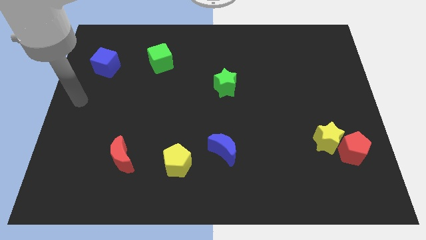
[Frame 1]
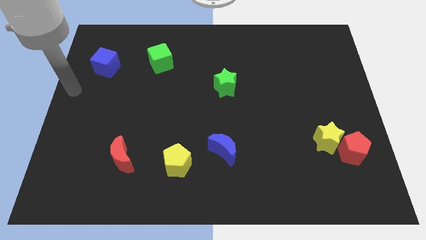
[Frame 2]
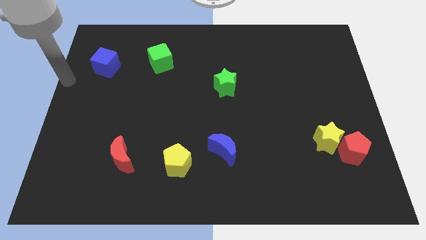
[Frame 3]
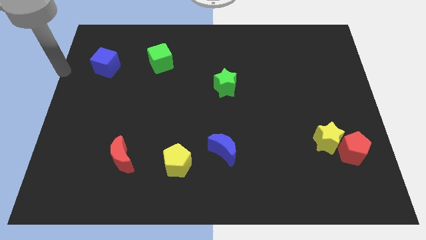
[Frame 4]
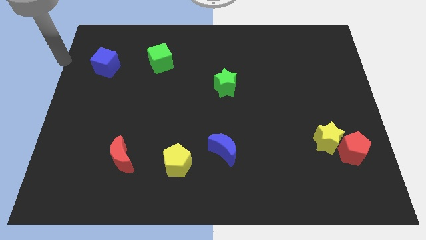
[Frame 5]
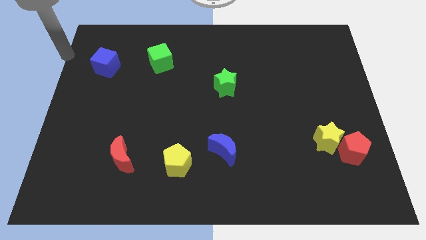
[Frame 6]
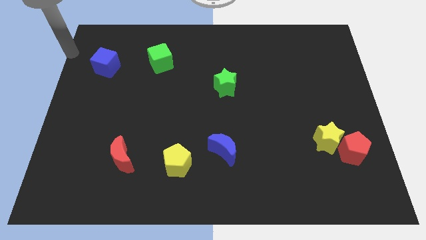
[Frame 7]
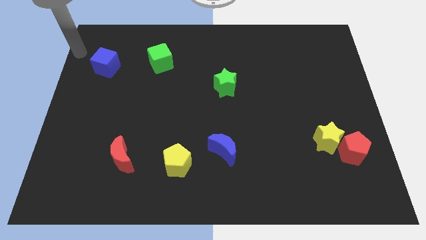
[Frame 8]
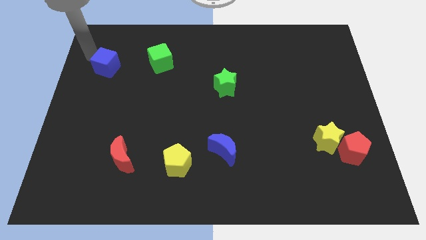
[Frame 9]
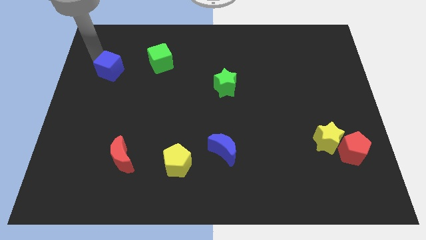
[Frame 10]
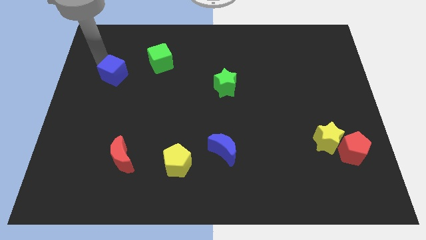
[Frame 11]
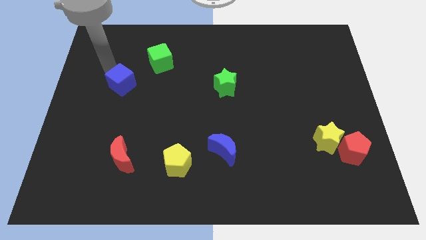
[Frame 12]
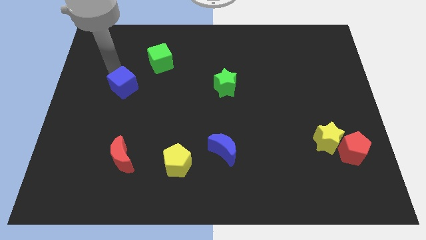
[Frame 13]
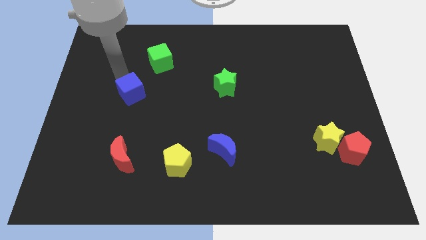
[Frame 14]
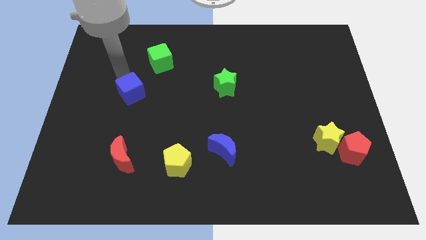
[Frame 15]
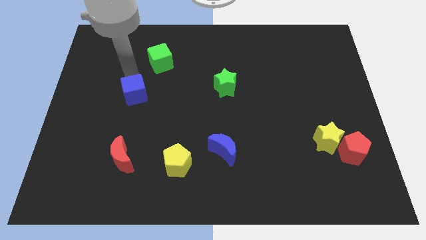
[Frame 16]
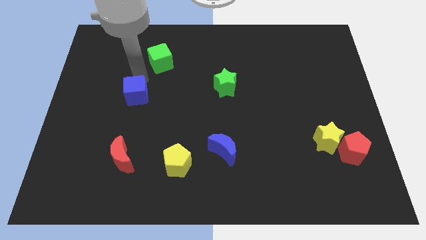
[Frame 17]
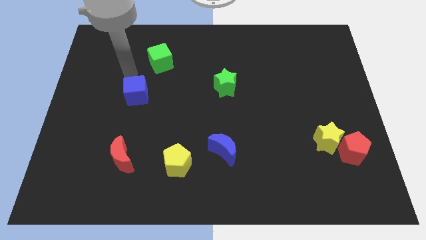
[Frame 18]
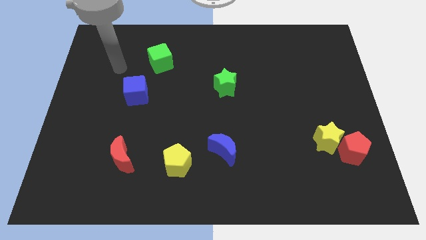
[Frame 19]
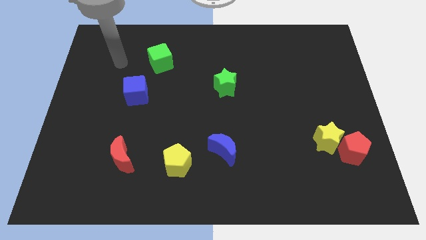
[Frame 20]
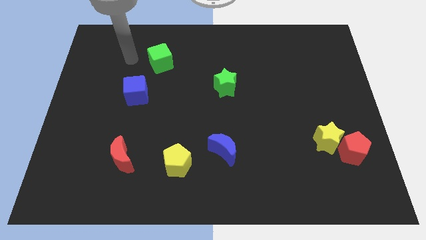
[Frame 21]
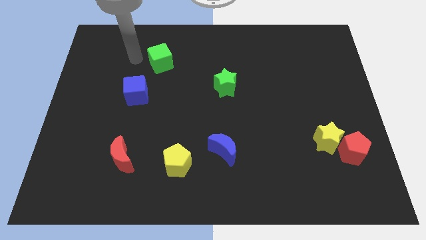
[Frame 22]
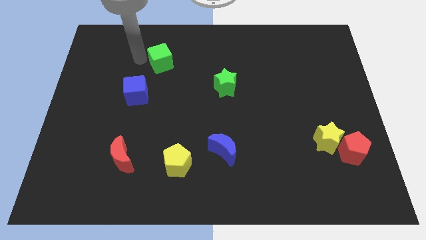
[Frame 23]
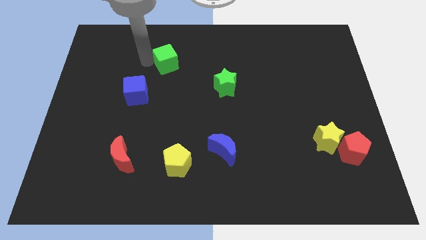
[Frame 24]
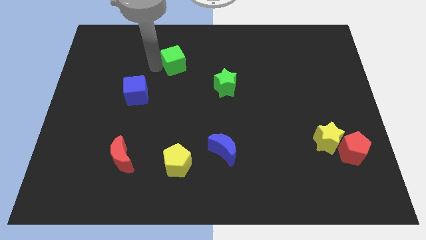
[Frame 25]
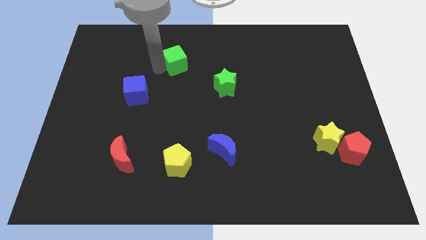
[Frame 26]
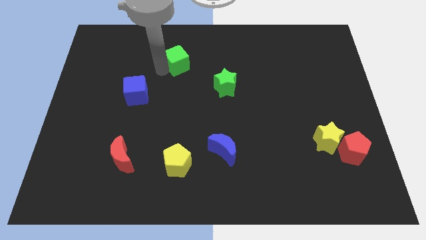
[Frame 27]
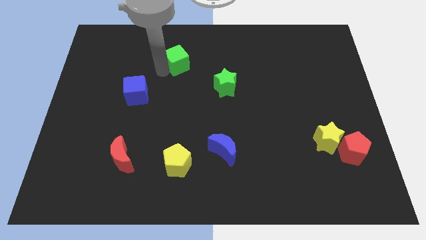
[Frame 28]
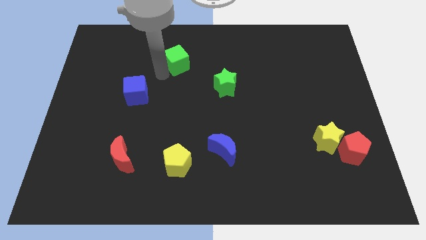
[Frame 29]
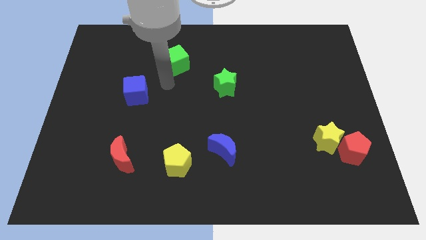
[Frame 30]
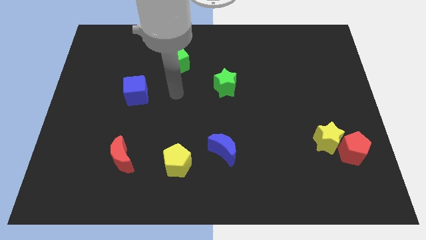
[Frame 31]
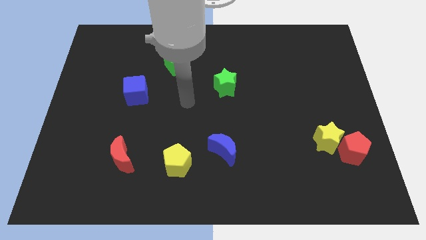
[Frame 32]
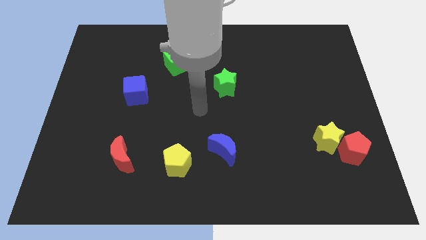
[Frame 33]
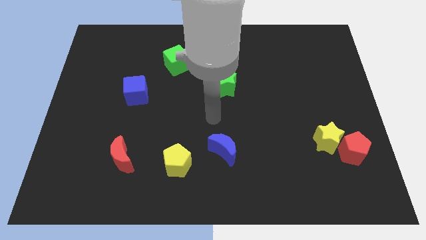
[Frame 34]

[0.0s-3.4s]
move both the cubes diagonal to each other

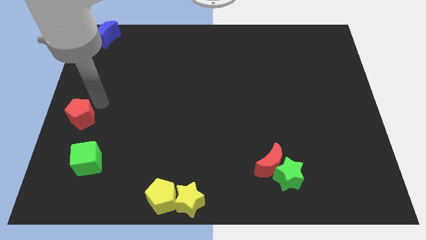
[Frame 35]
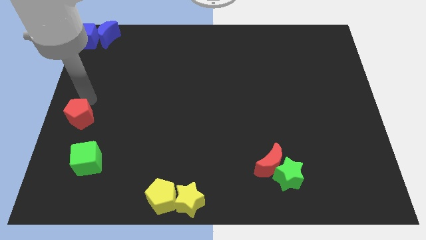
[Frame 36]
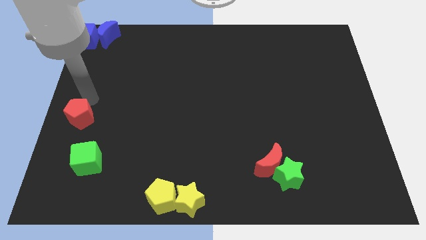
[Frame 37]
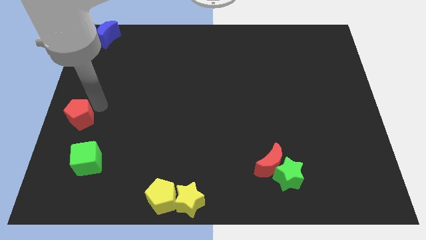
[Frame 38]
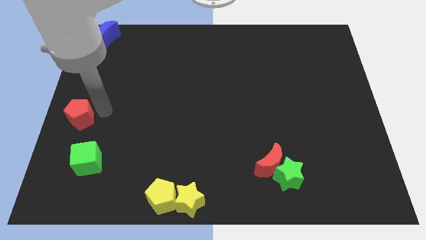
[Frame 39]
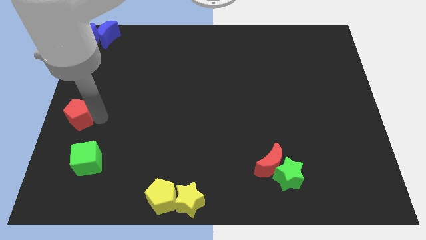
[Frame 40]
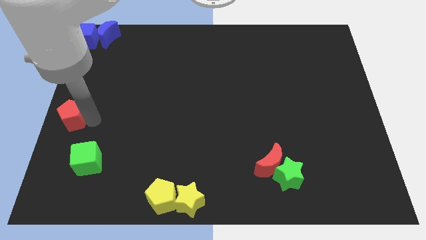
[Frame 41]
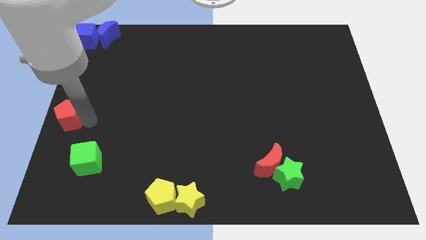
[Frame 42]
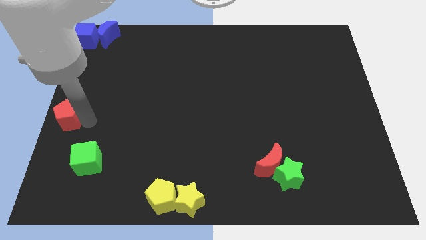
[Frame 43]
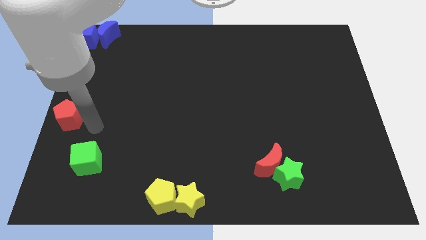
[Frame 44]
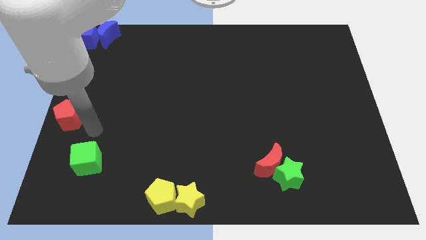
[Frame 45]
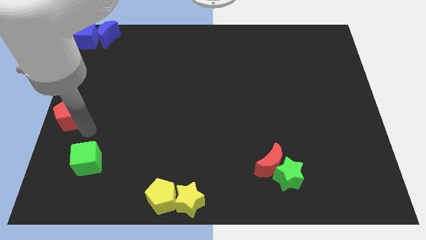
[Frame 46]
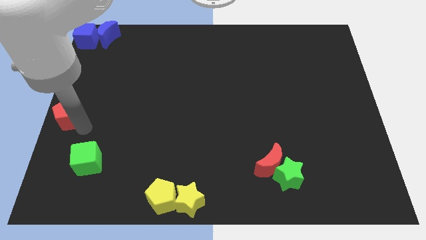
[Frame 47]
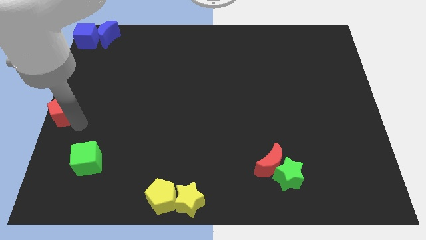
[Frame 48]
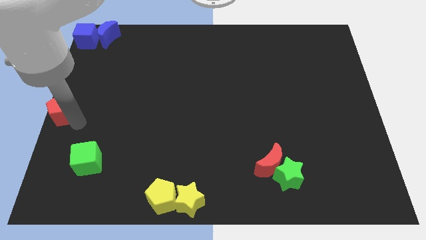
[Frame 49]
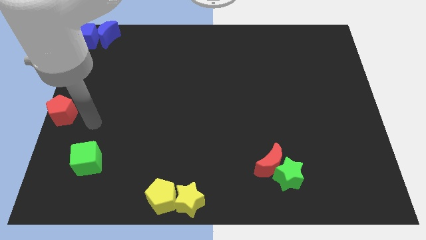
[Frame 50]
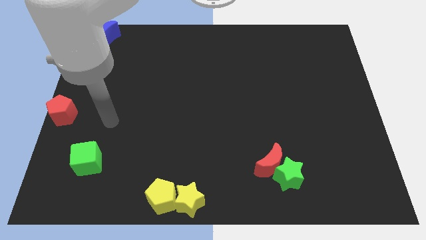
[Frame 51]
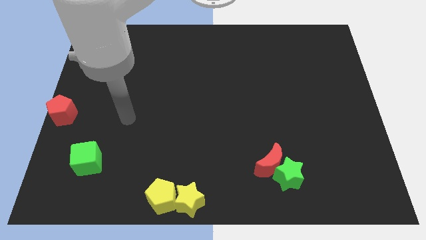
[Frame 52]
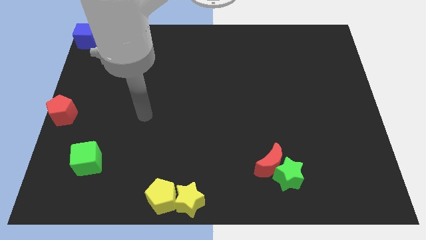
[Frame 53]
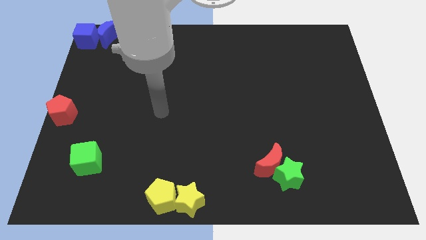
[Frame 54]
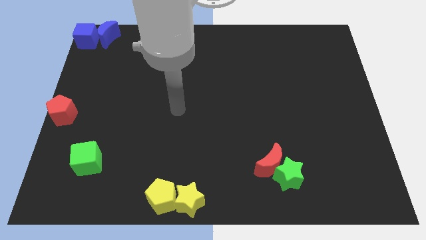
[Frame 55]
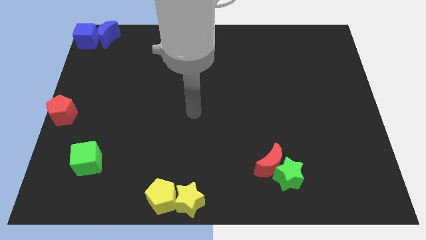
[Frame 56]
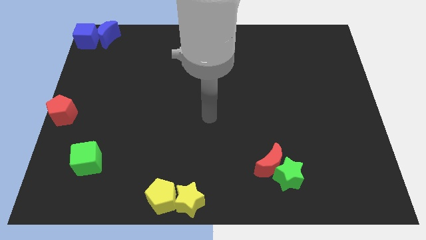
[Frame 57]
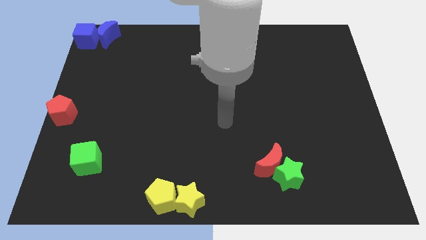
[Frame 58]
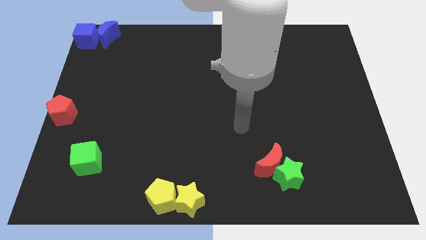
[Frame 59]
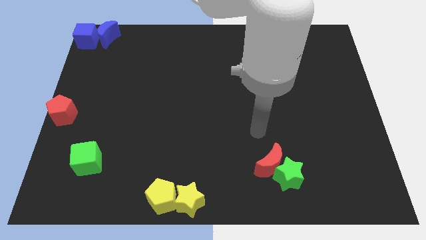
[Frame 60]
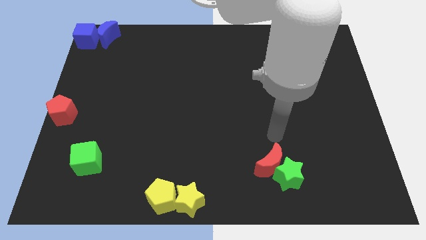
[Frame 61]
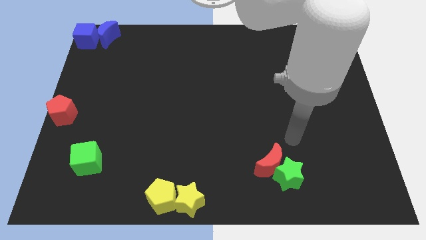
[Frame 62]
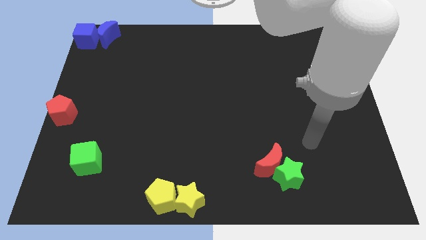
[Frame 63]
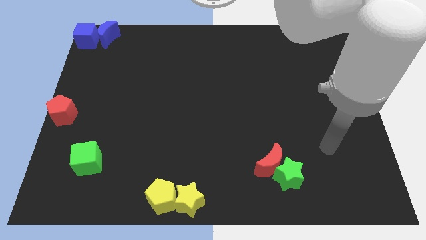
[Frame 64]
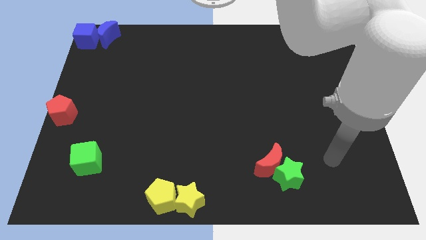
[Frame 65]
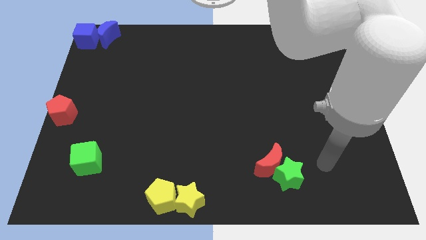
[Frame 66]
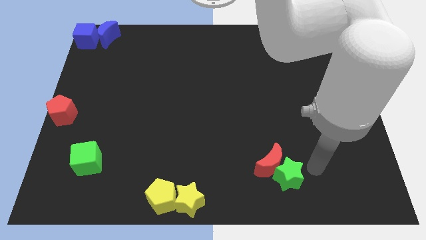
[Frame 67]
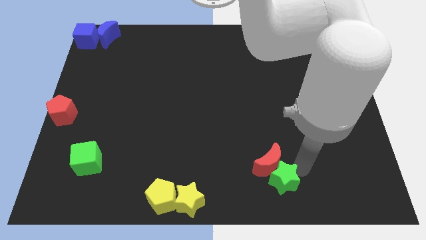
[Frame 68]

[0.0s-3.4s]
put the red pentagon vertically below the blue cube

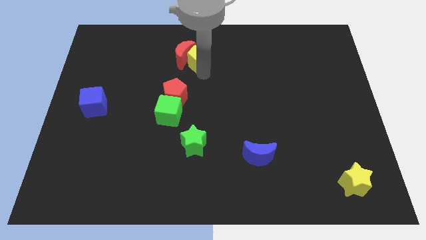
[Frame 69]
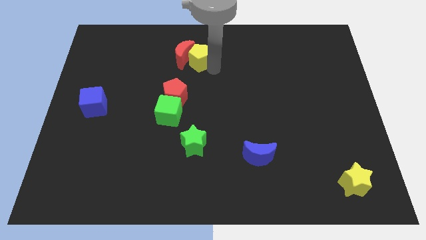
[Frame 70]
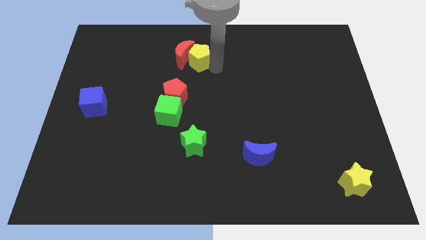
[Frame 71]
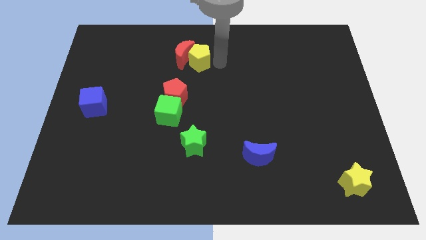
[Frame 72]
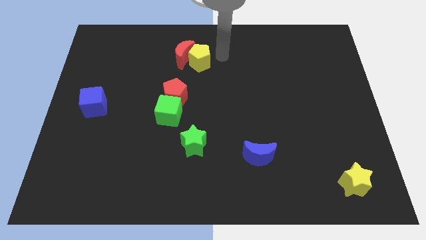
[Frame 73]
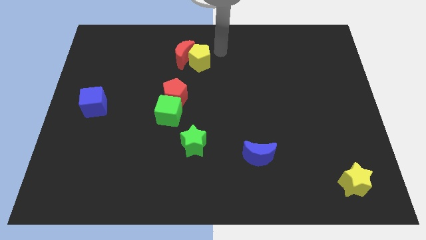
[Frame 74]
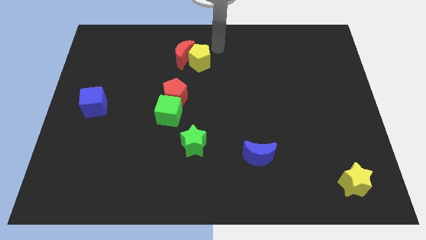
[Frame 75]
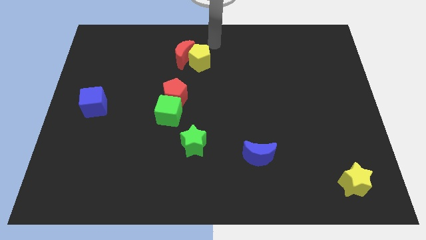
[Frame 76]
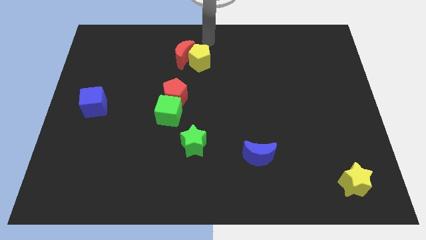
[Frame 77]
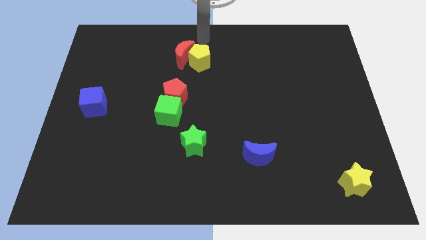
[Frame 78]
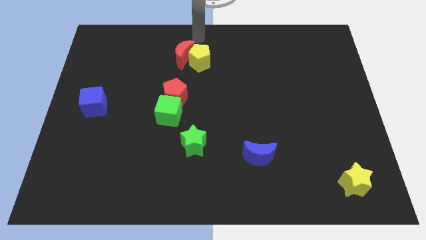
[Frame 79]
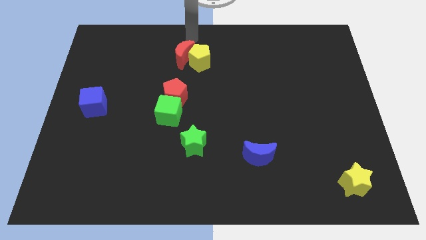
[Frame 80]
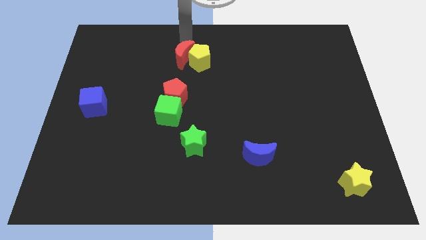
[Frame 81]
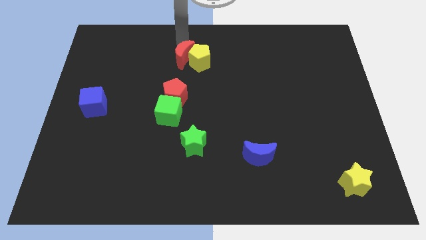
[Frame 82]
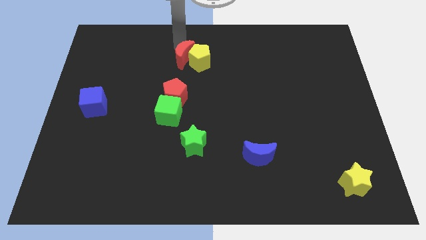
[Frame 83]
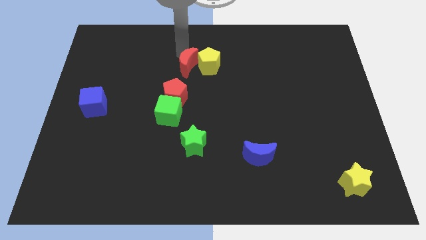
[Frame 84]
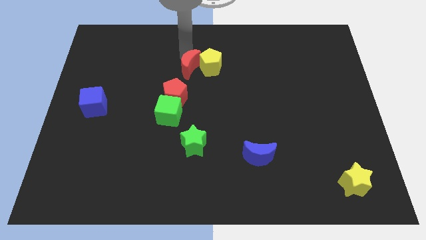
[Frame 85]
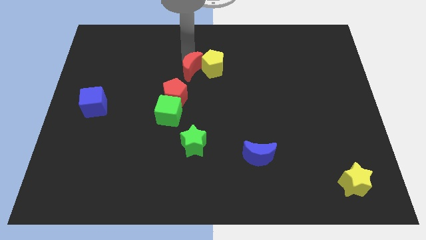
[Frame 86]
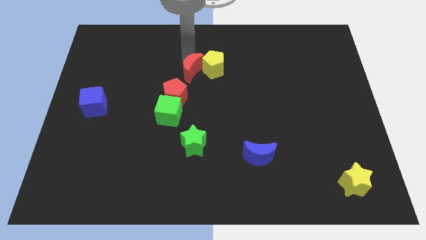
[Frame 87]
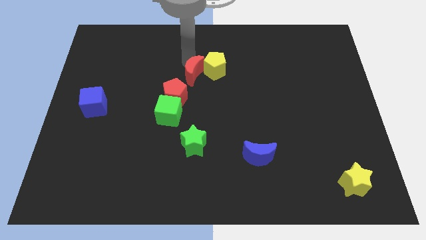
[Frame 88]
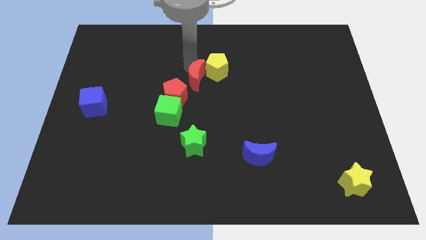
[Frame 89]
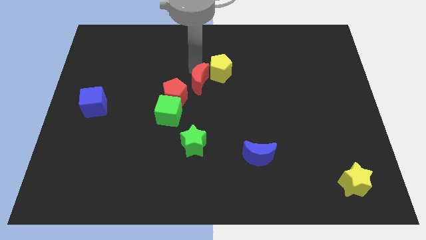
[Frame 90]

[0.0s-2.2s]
slightly move red crescent with yellow pentagon to the top center
